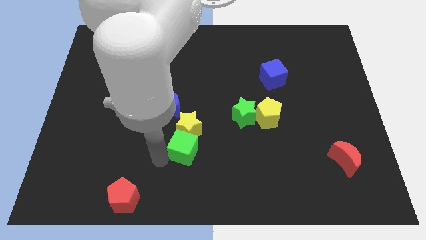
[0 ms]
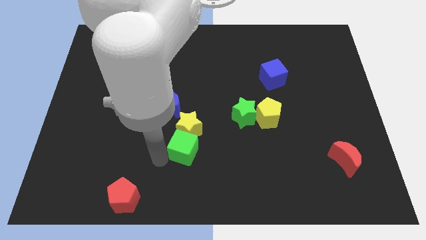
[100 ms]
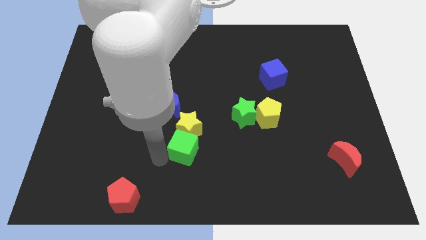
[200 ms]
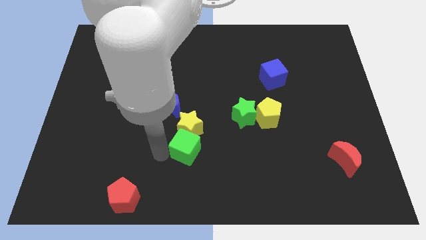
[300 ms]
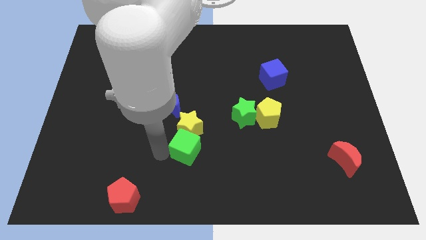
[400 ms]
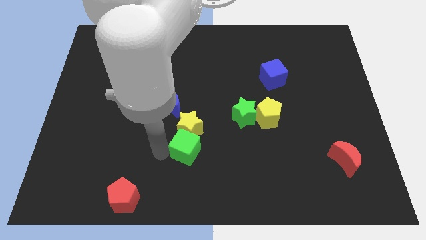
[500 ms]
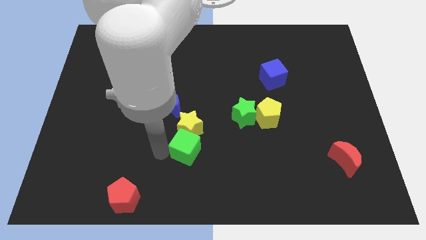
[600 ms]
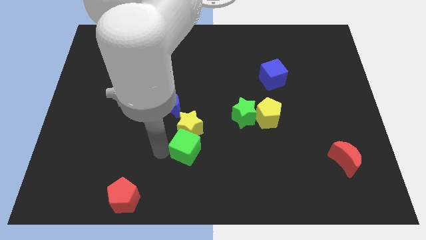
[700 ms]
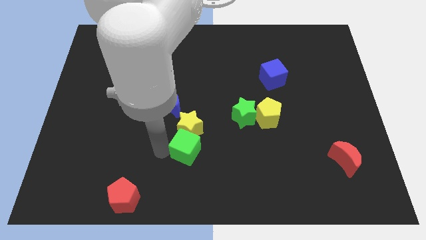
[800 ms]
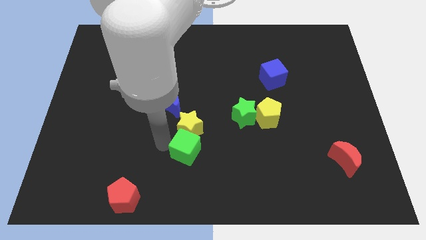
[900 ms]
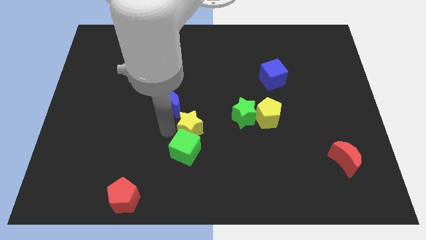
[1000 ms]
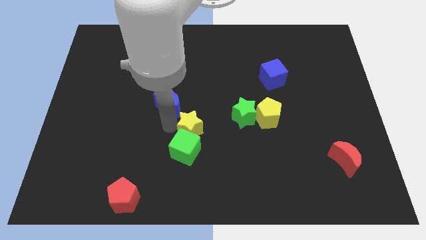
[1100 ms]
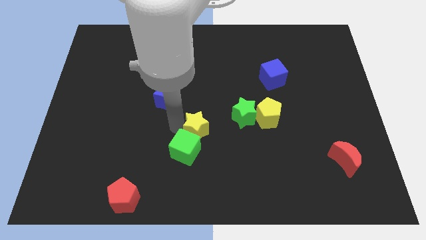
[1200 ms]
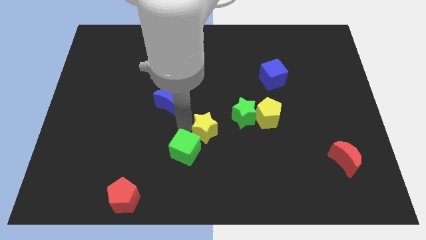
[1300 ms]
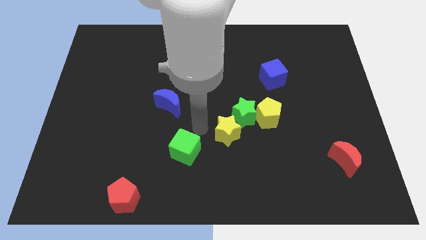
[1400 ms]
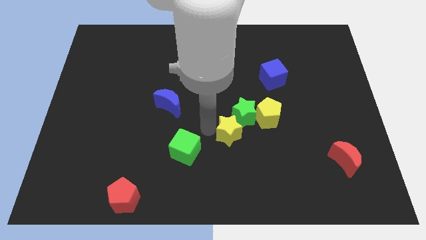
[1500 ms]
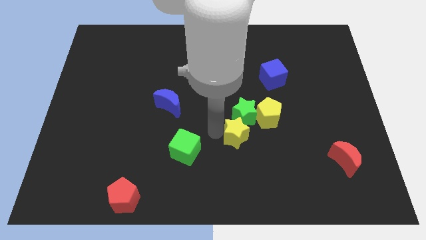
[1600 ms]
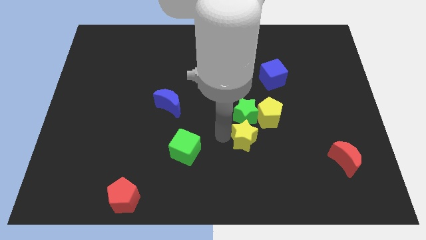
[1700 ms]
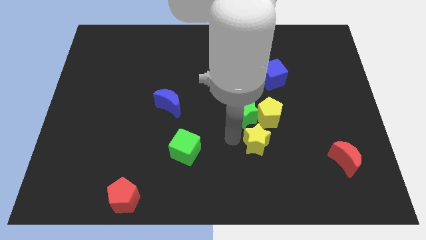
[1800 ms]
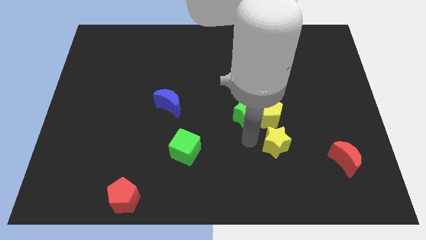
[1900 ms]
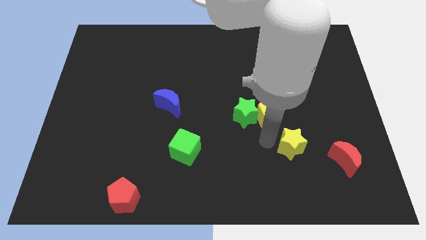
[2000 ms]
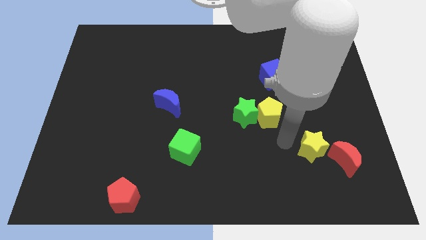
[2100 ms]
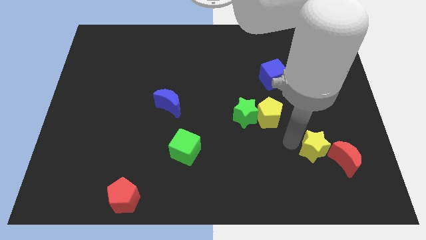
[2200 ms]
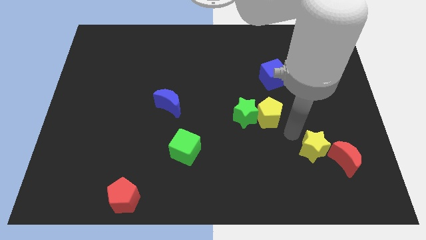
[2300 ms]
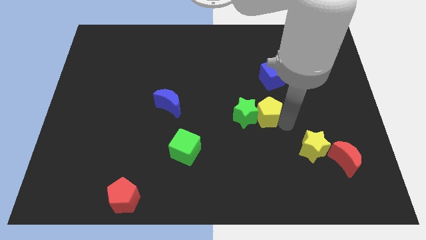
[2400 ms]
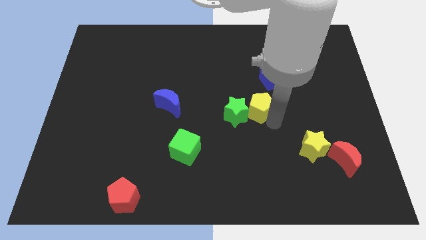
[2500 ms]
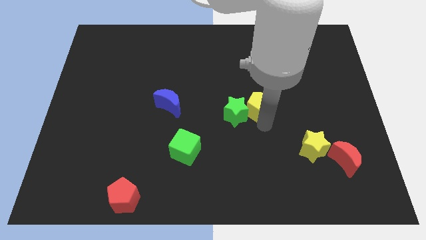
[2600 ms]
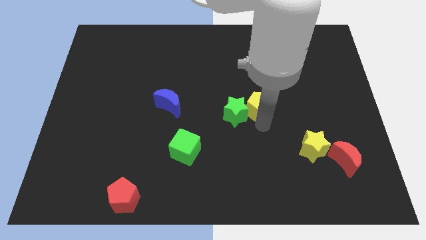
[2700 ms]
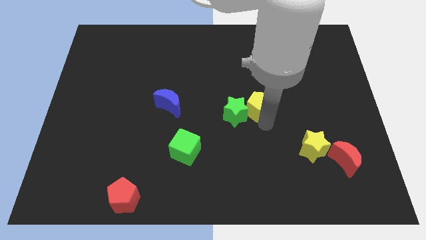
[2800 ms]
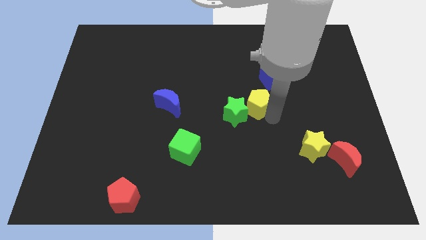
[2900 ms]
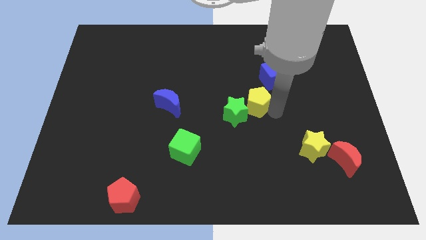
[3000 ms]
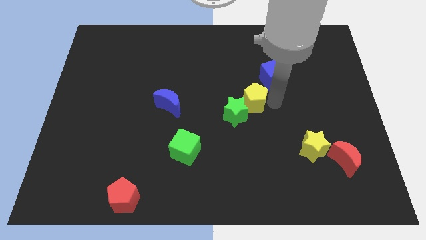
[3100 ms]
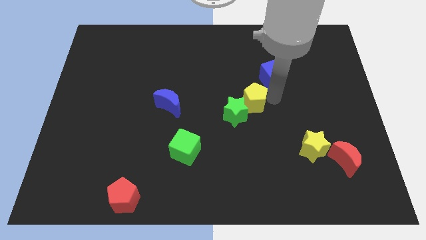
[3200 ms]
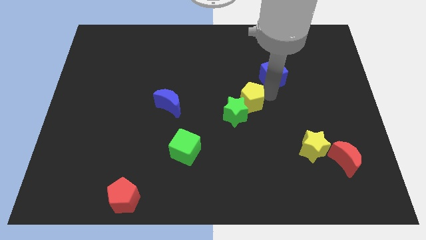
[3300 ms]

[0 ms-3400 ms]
push the yellow star towards red moon

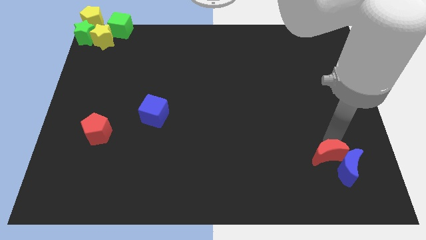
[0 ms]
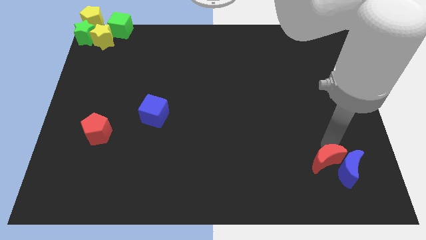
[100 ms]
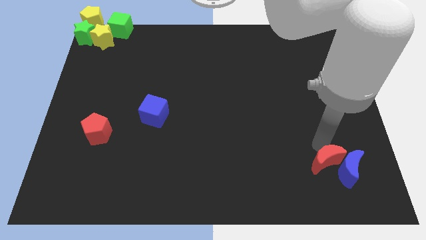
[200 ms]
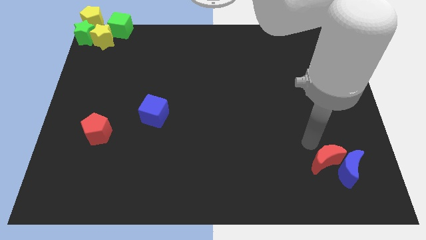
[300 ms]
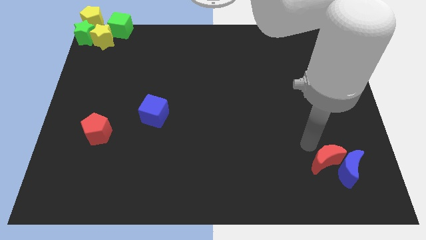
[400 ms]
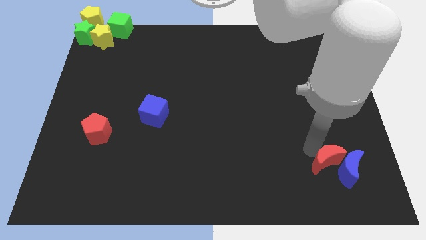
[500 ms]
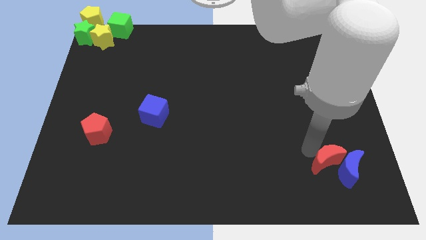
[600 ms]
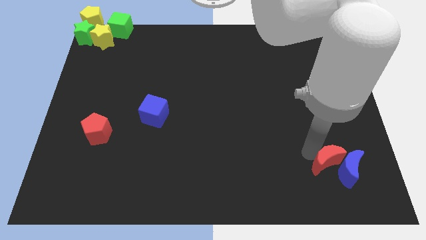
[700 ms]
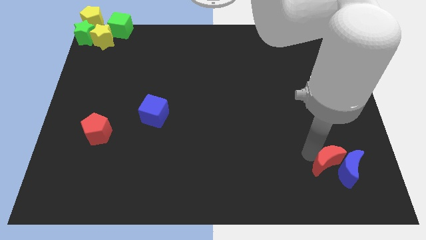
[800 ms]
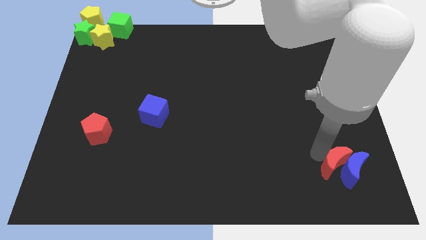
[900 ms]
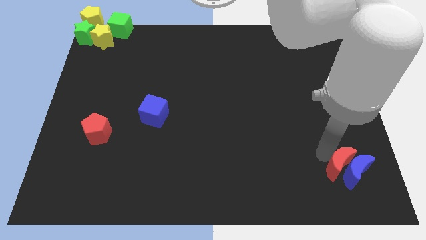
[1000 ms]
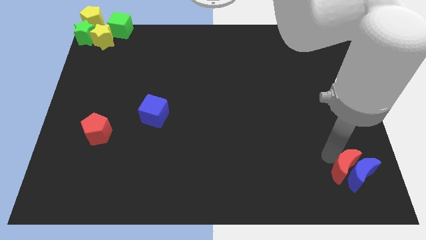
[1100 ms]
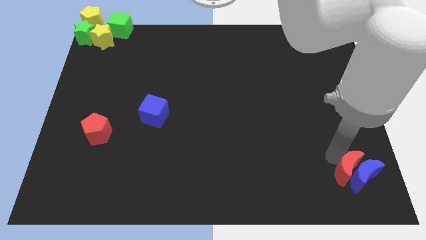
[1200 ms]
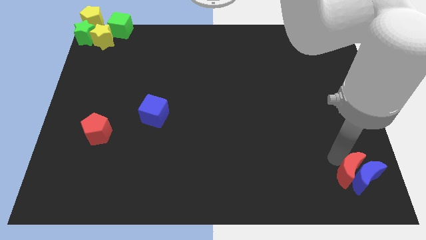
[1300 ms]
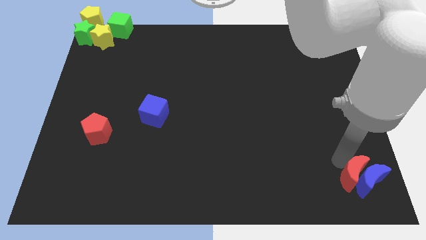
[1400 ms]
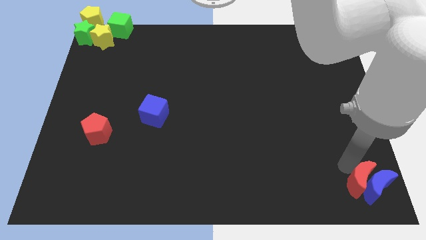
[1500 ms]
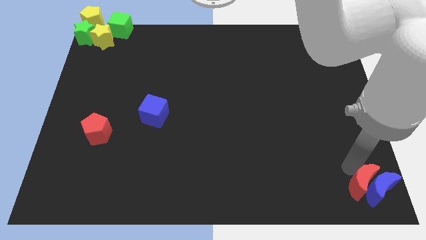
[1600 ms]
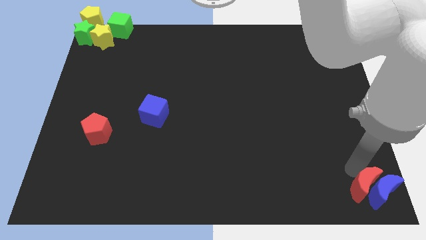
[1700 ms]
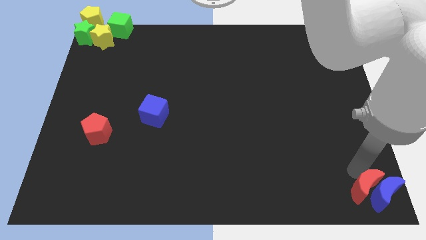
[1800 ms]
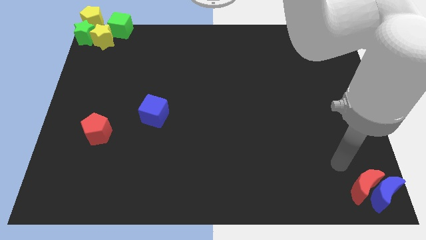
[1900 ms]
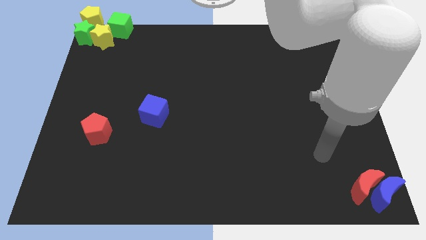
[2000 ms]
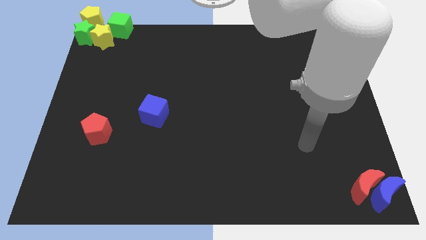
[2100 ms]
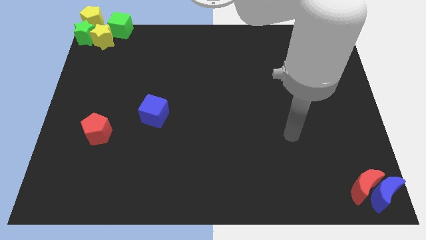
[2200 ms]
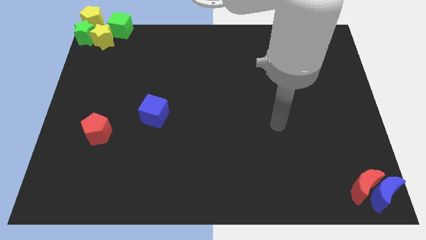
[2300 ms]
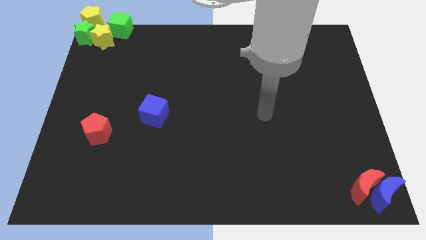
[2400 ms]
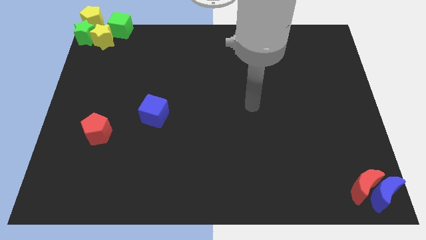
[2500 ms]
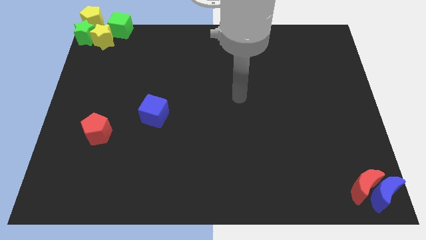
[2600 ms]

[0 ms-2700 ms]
push the blue and the red crescents to the bottom right corner of the board

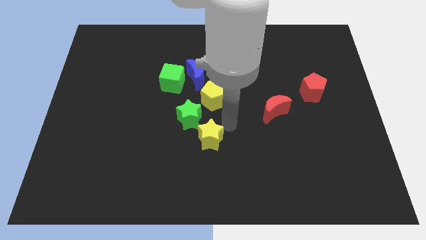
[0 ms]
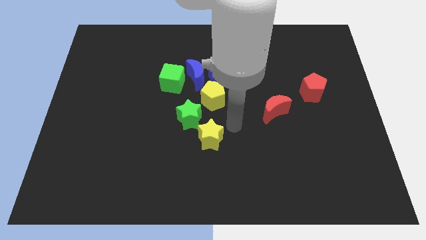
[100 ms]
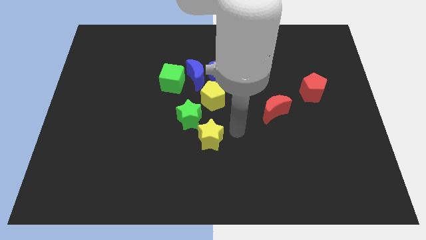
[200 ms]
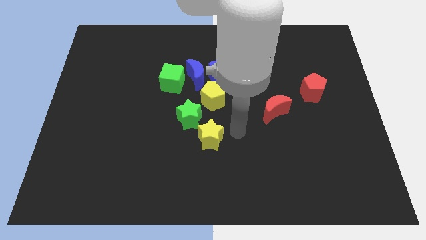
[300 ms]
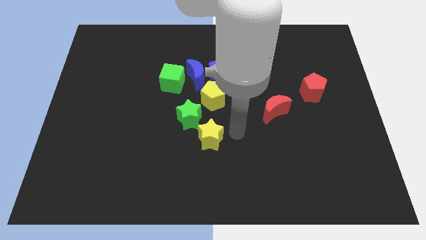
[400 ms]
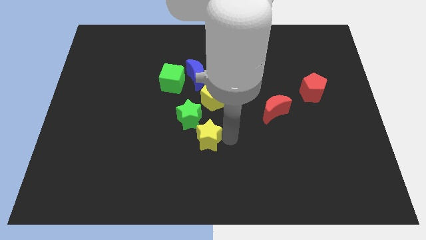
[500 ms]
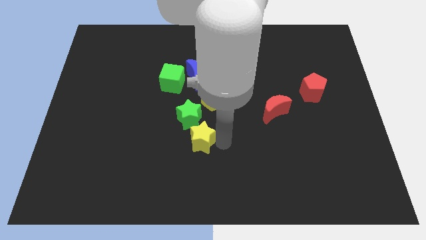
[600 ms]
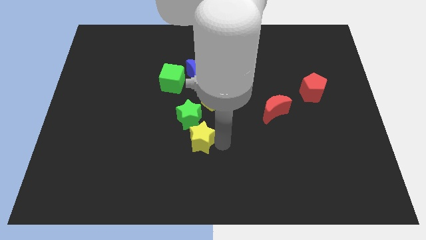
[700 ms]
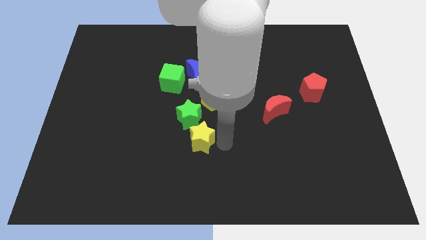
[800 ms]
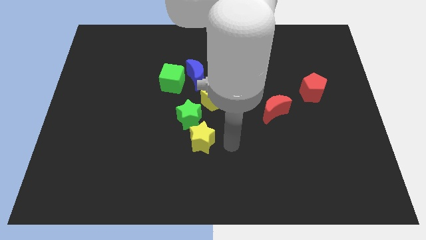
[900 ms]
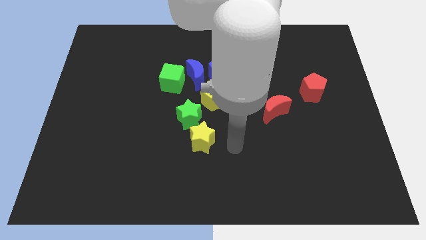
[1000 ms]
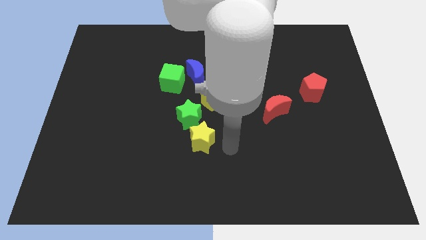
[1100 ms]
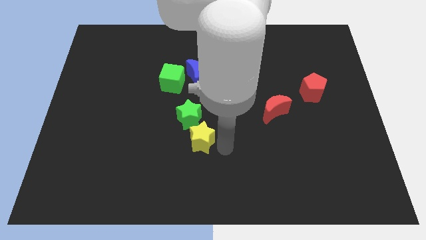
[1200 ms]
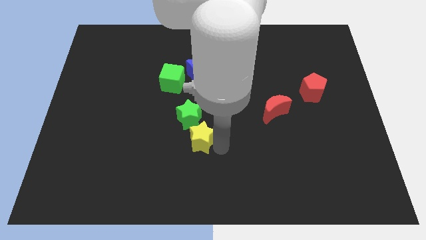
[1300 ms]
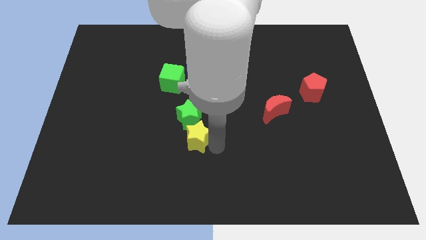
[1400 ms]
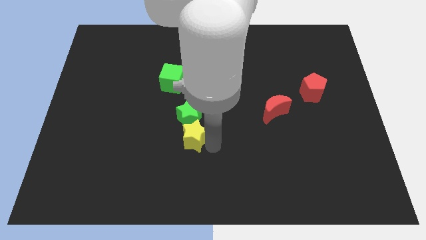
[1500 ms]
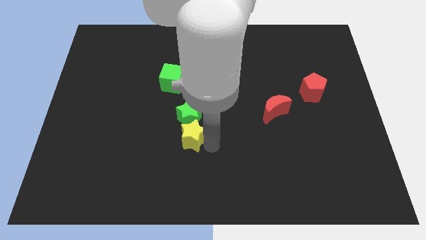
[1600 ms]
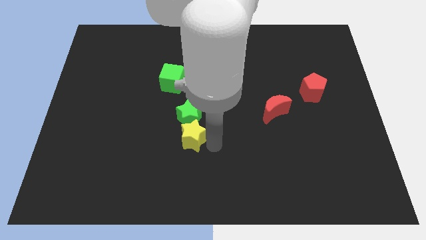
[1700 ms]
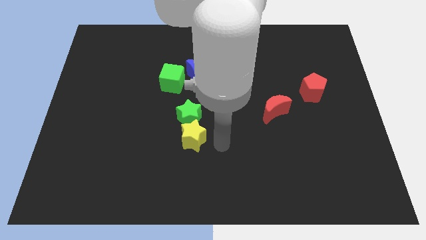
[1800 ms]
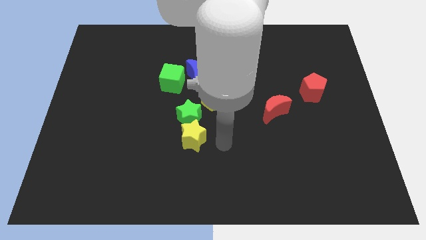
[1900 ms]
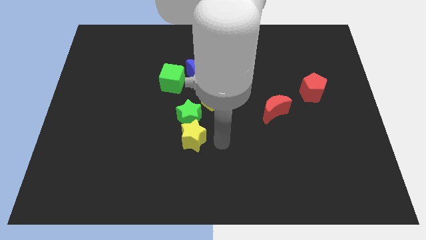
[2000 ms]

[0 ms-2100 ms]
push the yellow star to the bottom side of the green star

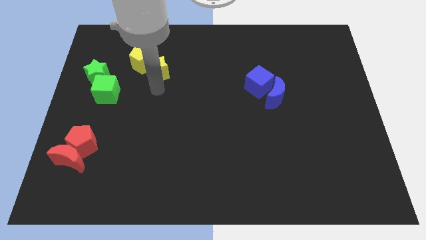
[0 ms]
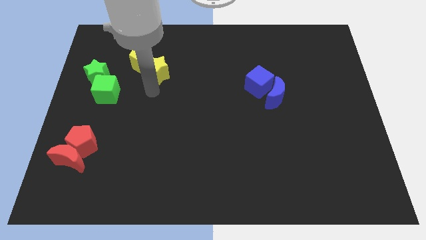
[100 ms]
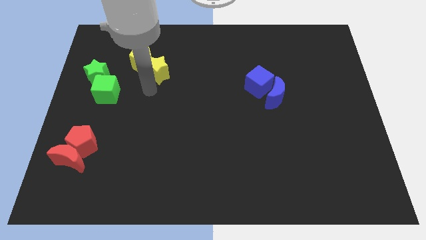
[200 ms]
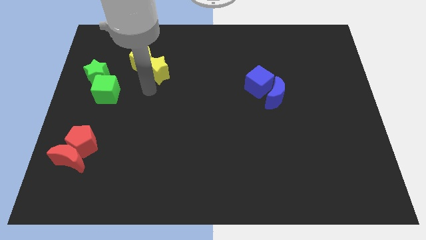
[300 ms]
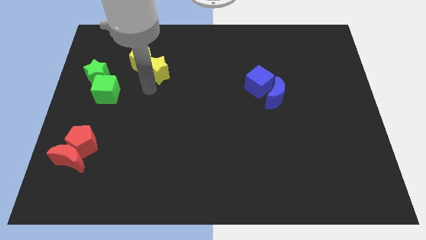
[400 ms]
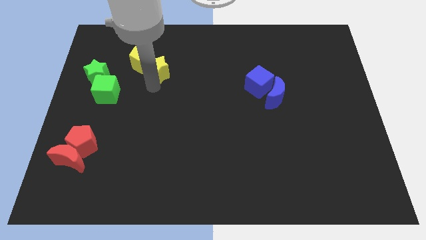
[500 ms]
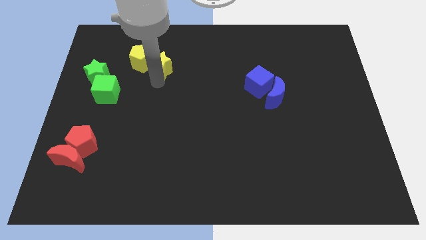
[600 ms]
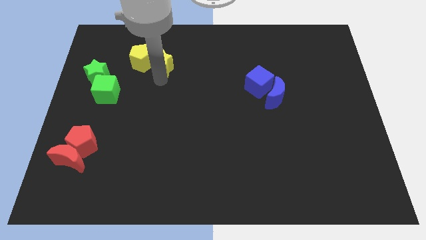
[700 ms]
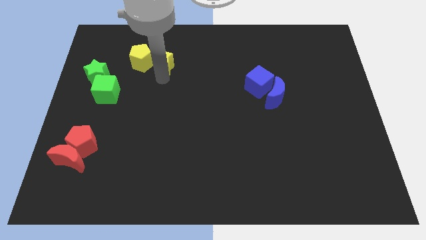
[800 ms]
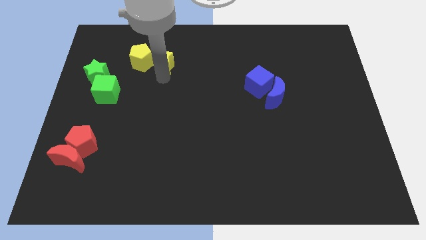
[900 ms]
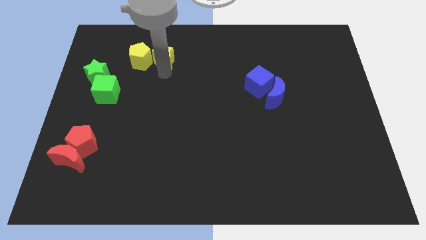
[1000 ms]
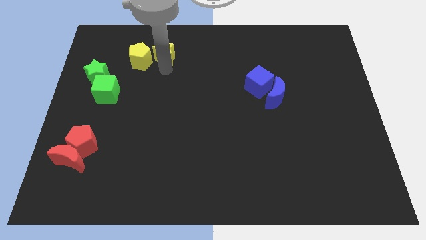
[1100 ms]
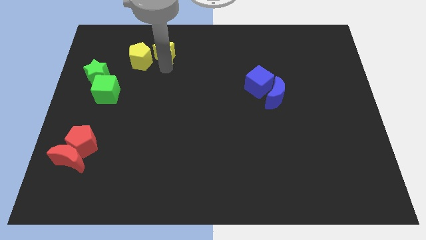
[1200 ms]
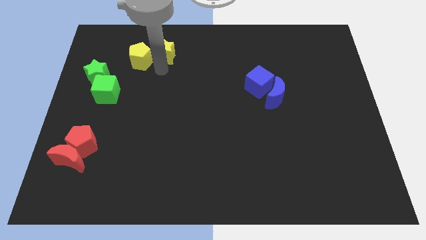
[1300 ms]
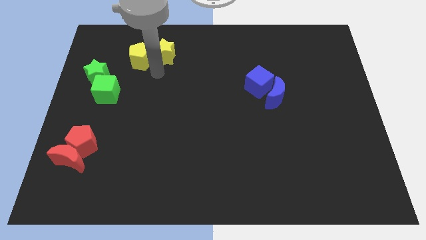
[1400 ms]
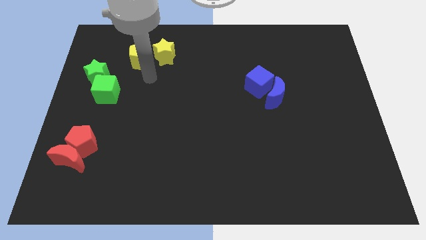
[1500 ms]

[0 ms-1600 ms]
separate yellow star from the yellow pentagon
